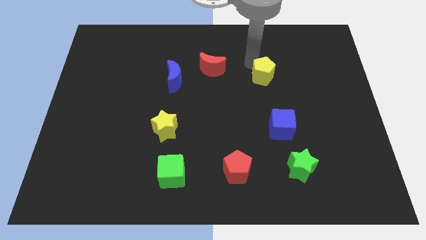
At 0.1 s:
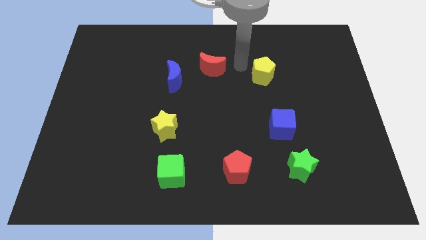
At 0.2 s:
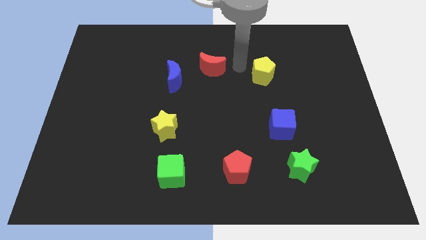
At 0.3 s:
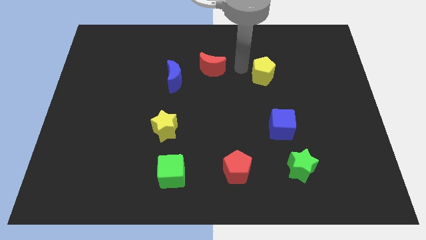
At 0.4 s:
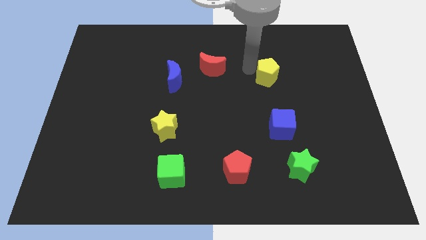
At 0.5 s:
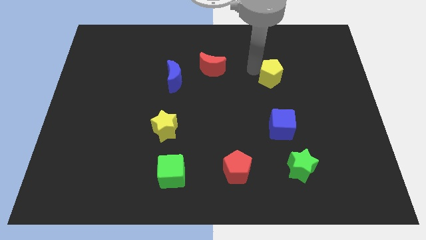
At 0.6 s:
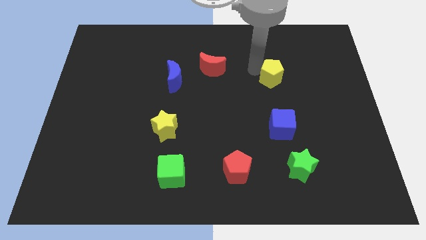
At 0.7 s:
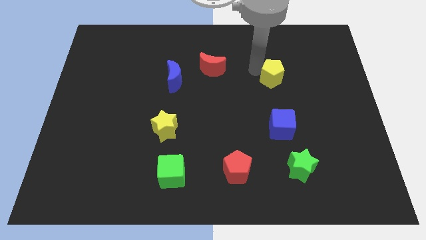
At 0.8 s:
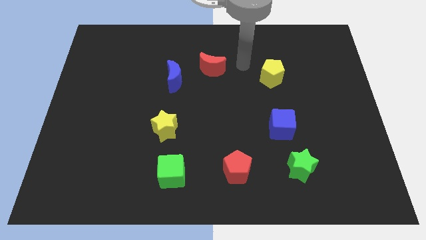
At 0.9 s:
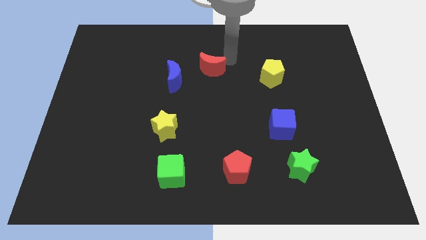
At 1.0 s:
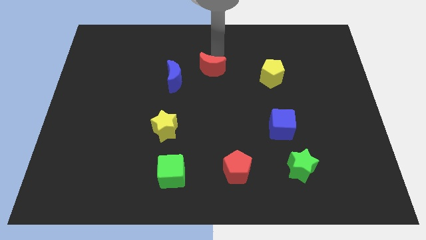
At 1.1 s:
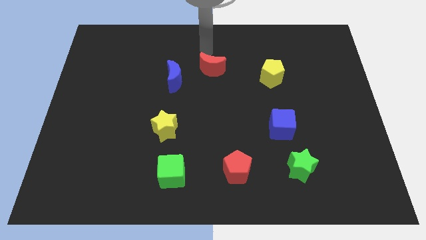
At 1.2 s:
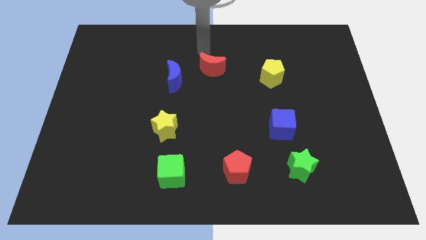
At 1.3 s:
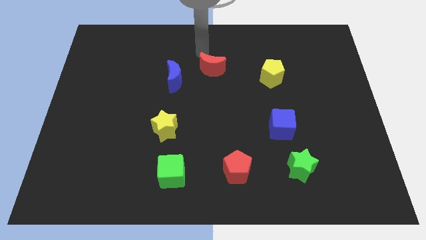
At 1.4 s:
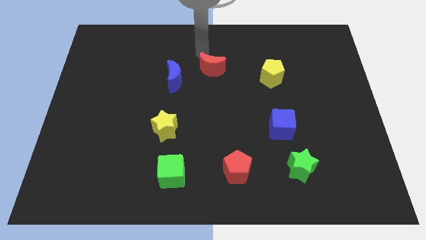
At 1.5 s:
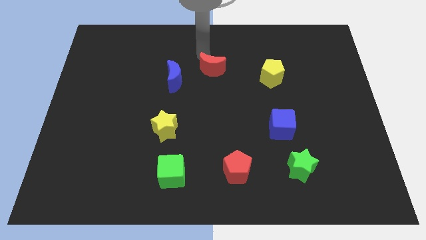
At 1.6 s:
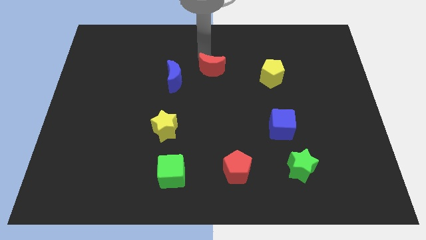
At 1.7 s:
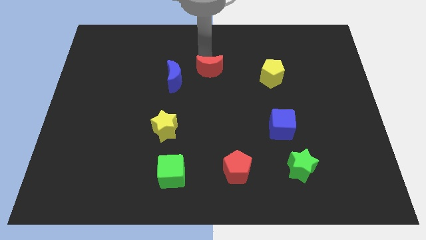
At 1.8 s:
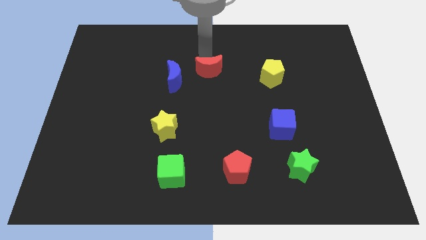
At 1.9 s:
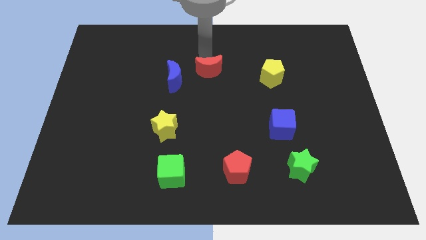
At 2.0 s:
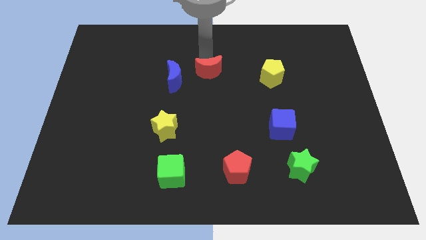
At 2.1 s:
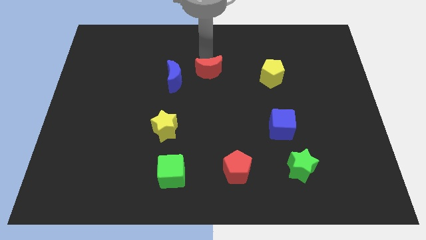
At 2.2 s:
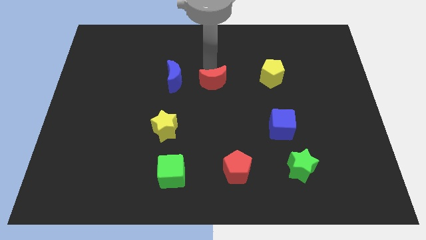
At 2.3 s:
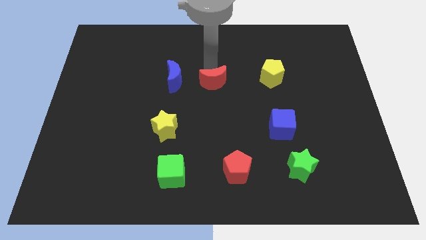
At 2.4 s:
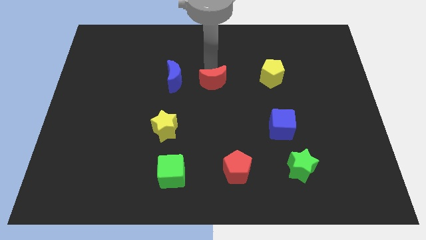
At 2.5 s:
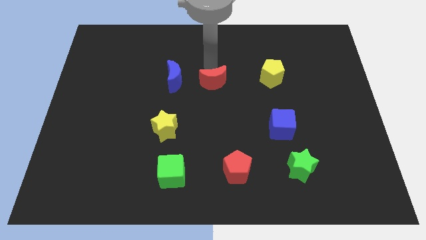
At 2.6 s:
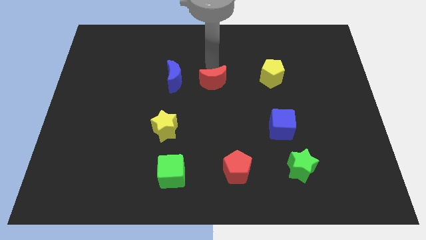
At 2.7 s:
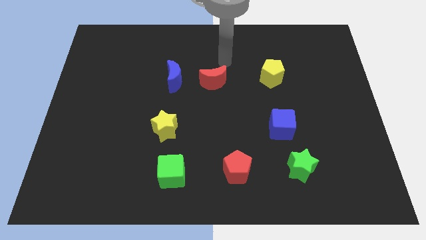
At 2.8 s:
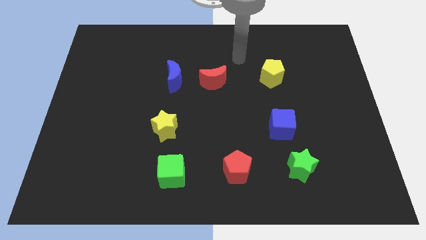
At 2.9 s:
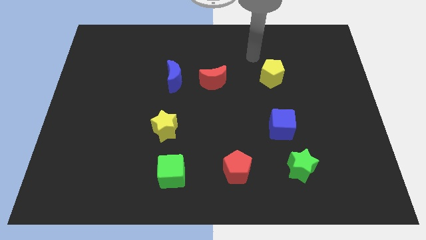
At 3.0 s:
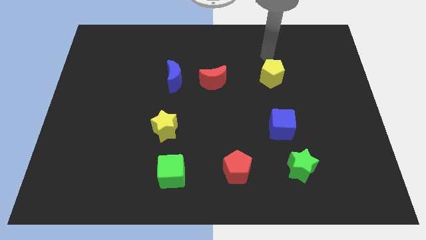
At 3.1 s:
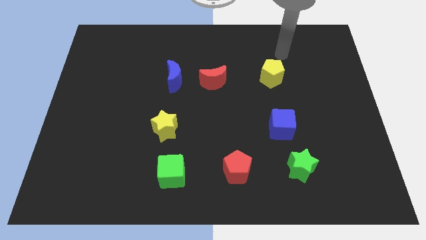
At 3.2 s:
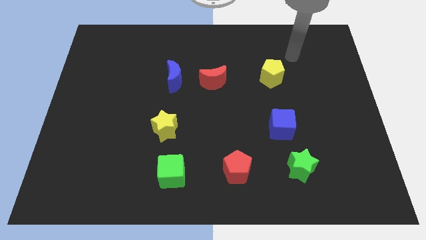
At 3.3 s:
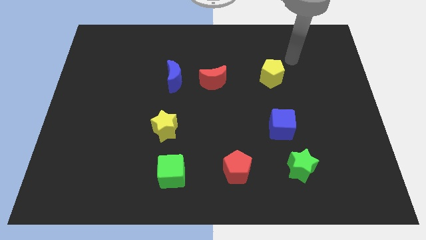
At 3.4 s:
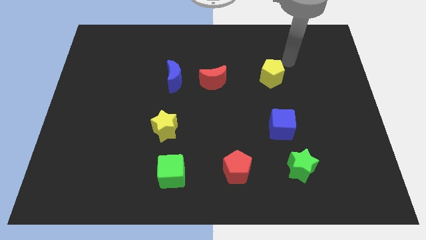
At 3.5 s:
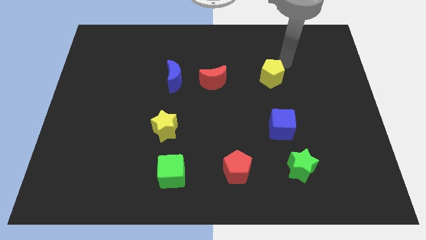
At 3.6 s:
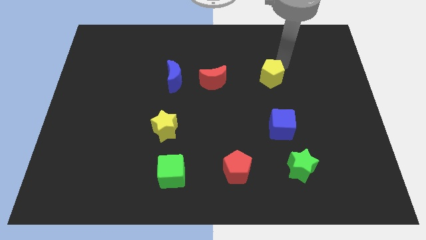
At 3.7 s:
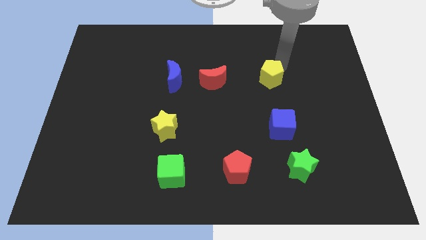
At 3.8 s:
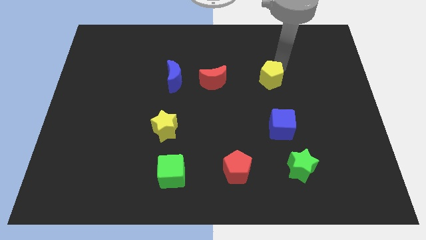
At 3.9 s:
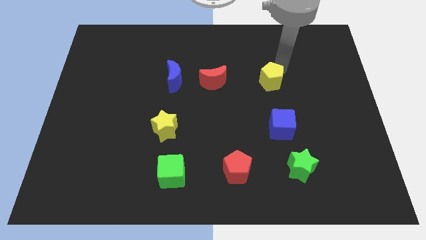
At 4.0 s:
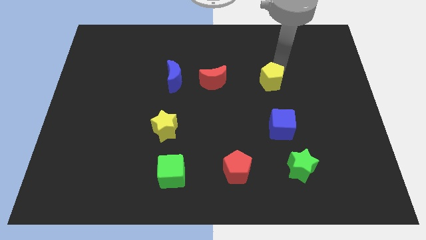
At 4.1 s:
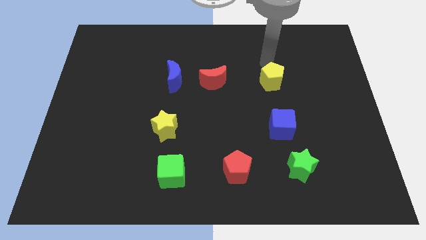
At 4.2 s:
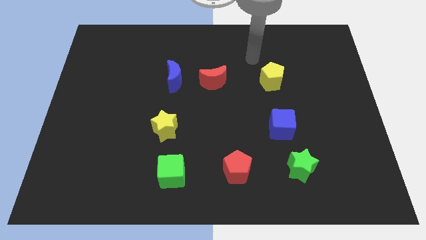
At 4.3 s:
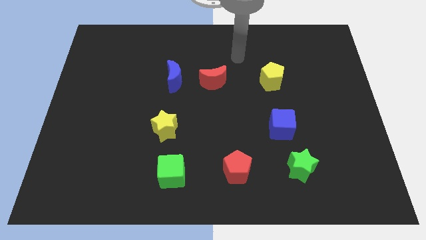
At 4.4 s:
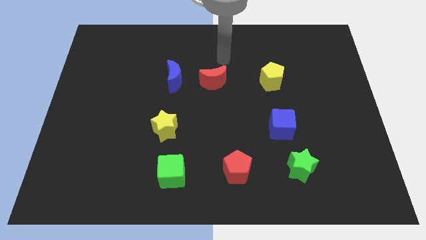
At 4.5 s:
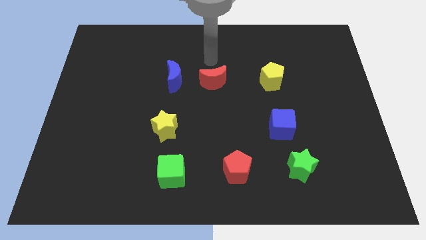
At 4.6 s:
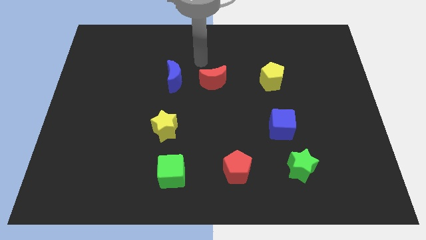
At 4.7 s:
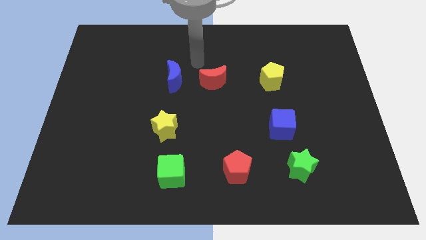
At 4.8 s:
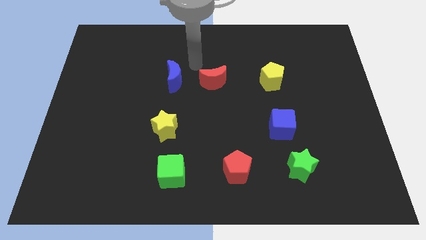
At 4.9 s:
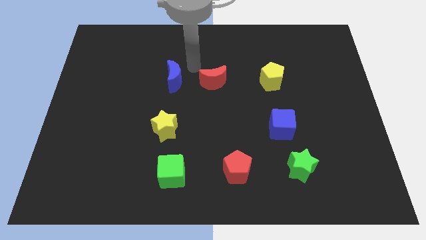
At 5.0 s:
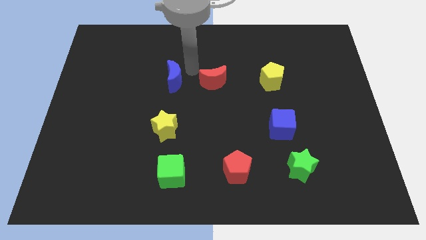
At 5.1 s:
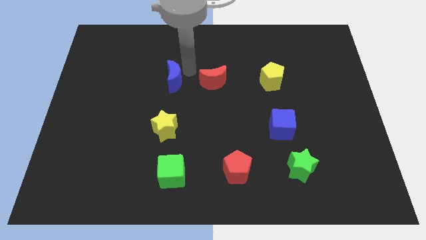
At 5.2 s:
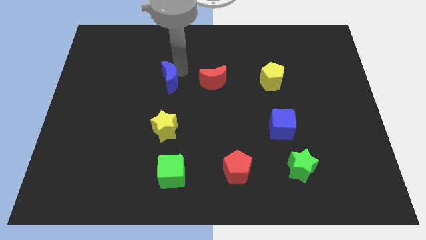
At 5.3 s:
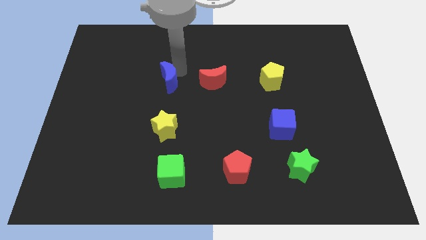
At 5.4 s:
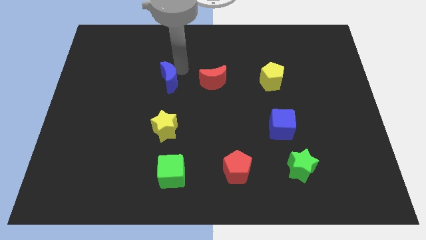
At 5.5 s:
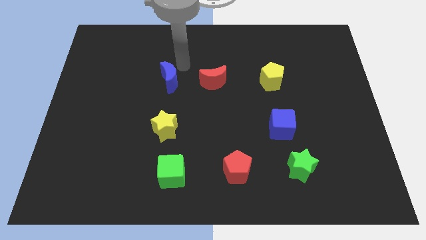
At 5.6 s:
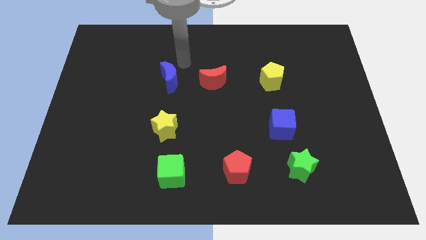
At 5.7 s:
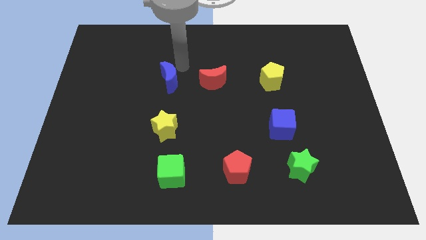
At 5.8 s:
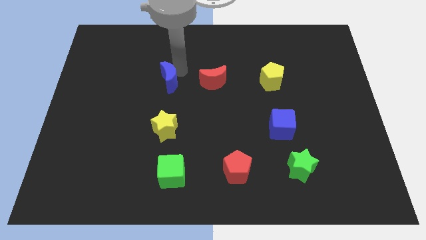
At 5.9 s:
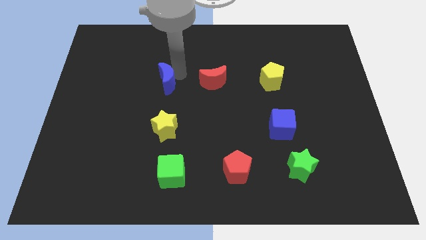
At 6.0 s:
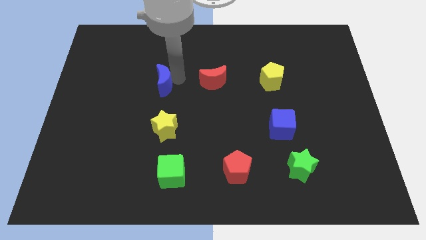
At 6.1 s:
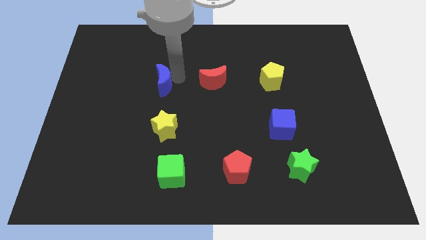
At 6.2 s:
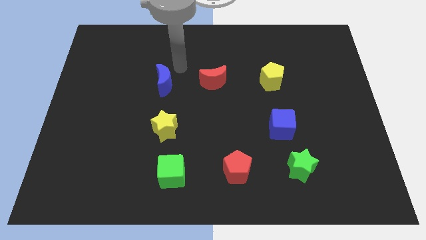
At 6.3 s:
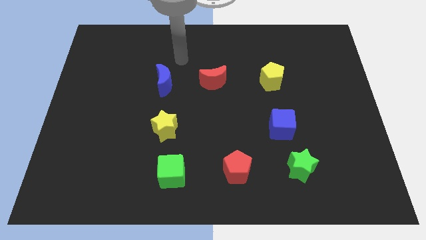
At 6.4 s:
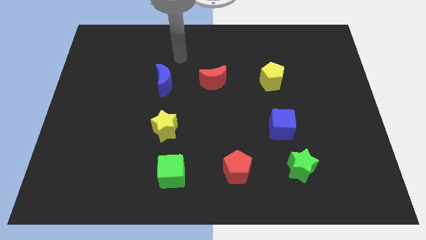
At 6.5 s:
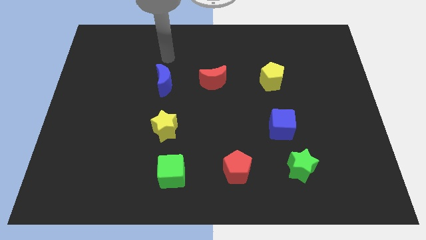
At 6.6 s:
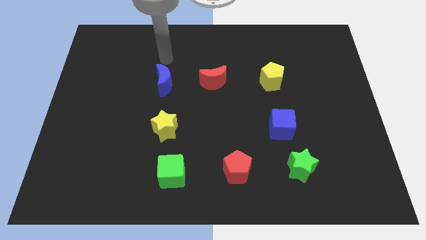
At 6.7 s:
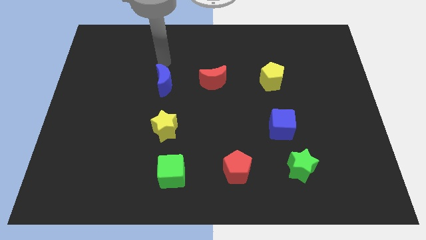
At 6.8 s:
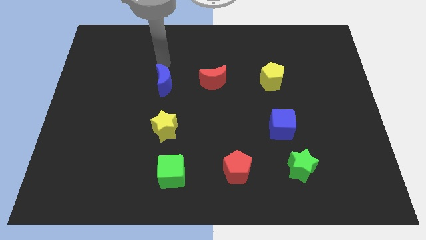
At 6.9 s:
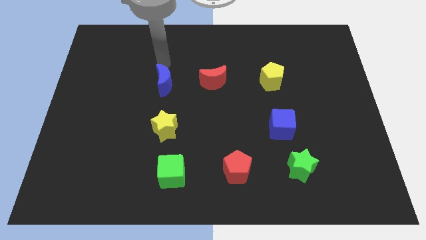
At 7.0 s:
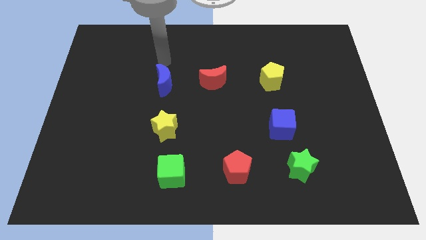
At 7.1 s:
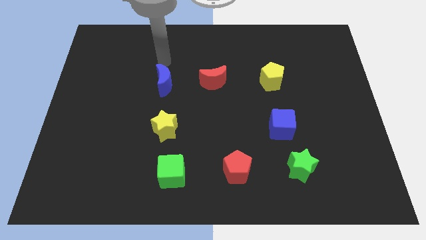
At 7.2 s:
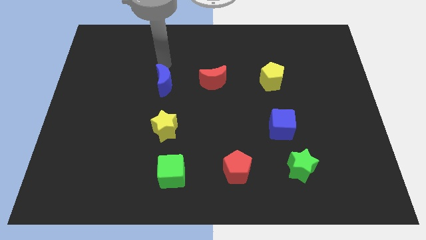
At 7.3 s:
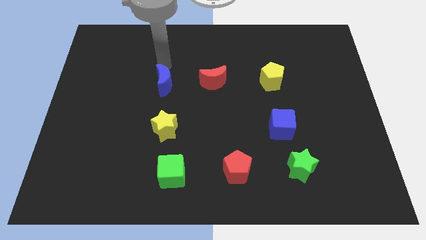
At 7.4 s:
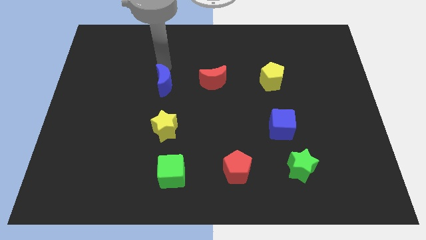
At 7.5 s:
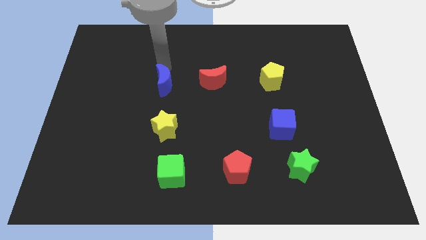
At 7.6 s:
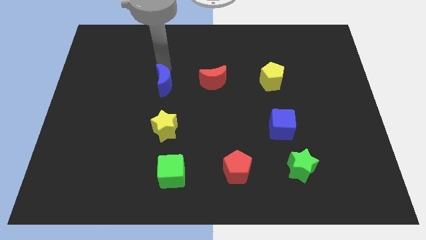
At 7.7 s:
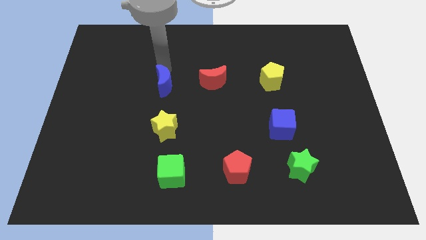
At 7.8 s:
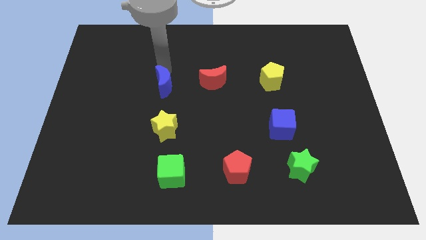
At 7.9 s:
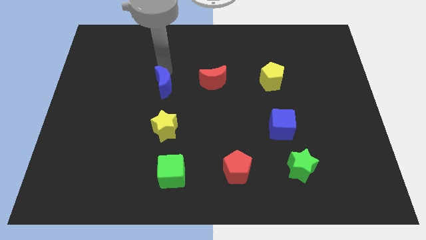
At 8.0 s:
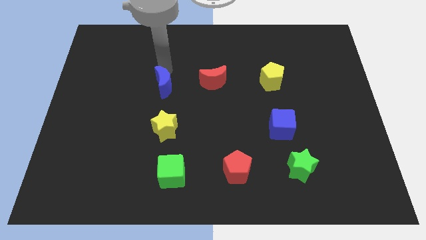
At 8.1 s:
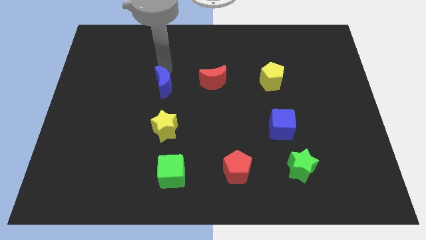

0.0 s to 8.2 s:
adjust yellow pentagon blue and red moons to make a horizontal line

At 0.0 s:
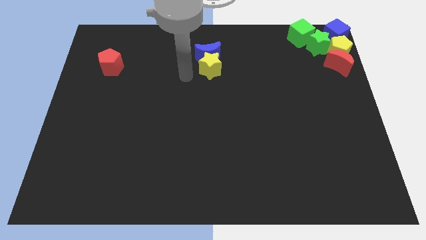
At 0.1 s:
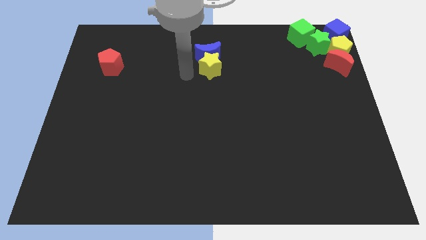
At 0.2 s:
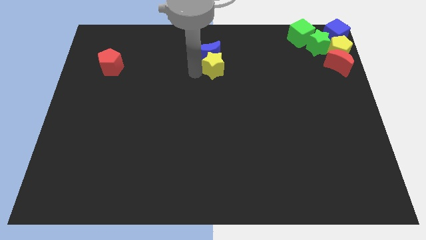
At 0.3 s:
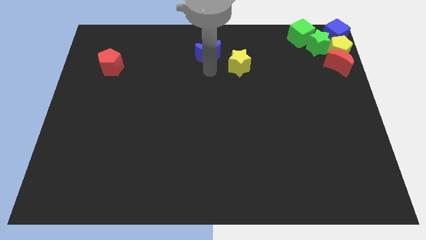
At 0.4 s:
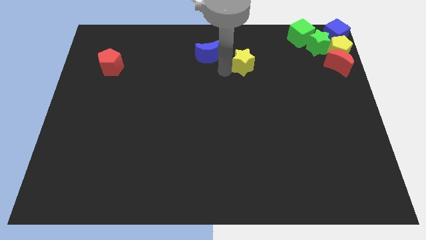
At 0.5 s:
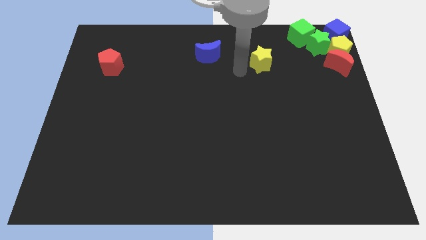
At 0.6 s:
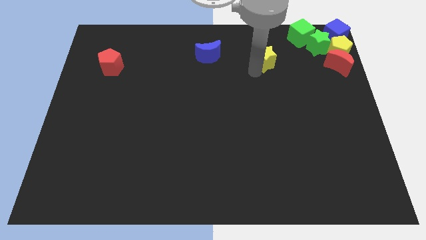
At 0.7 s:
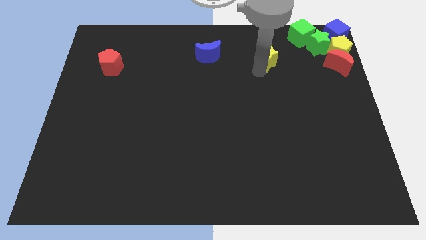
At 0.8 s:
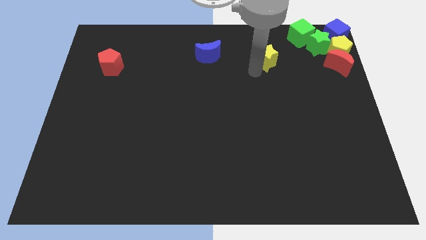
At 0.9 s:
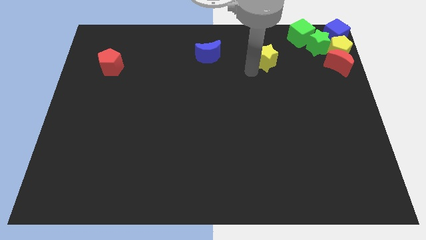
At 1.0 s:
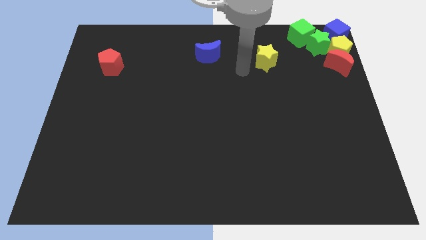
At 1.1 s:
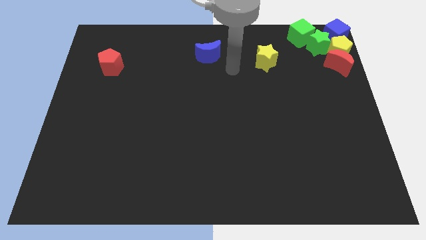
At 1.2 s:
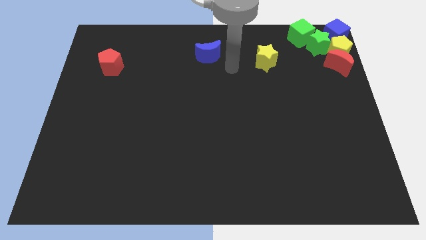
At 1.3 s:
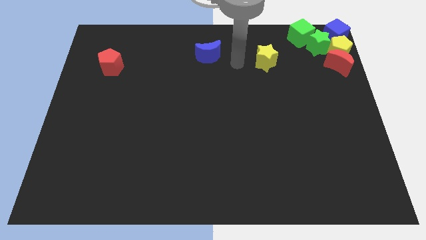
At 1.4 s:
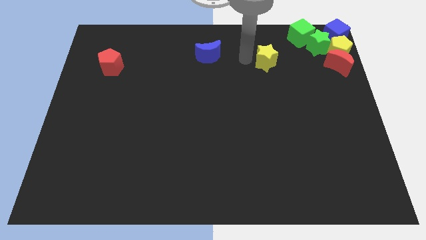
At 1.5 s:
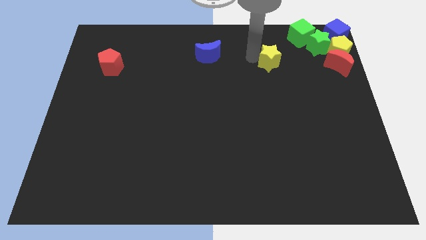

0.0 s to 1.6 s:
separate the yellow star from the blue crescent
